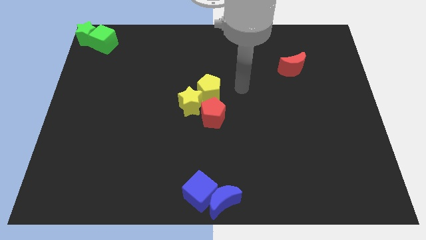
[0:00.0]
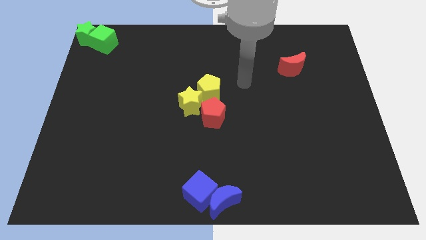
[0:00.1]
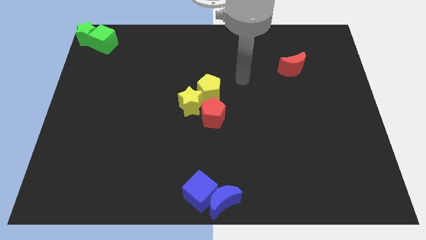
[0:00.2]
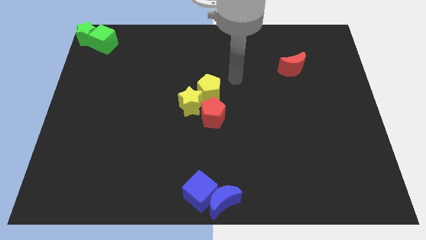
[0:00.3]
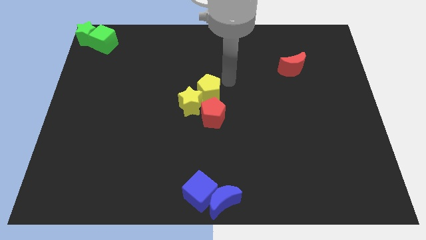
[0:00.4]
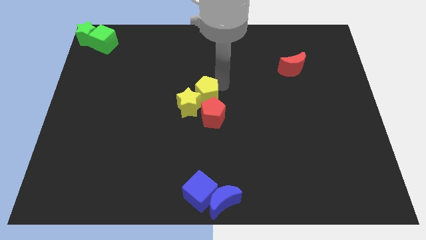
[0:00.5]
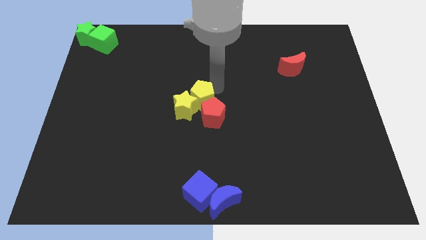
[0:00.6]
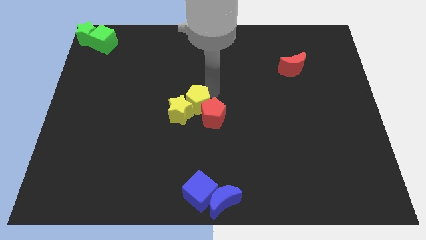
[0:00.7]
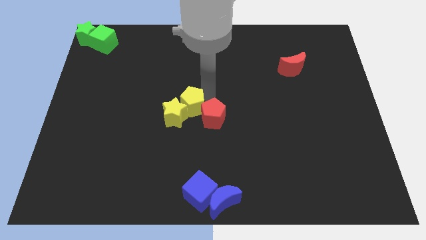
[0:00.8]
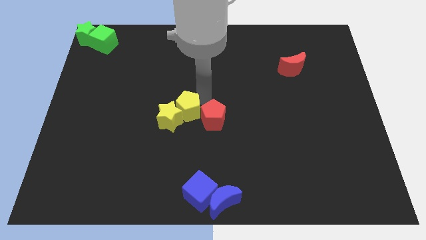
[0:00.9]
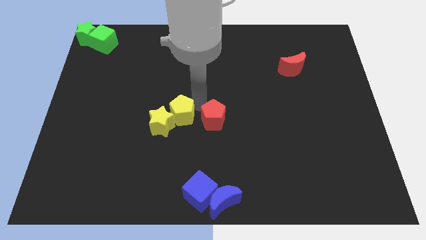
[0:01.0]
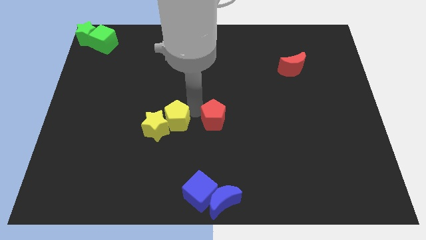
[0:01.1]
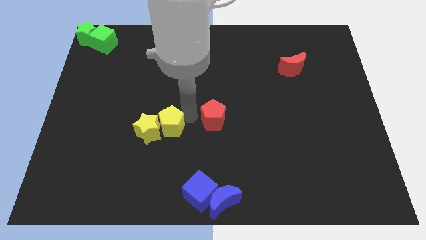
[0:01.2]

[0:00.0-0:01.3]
push yellow pentagon beside red pentagon

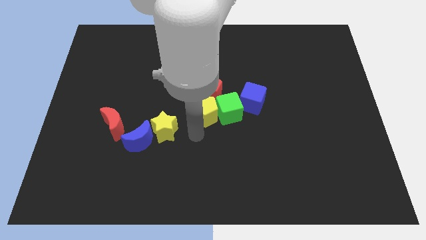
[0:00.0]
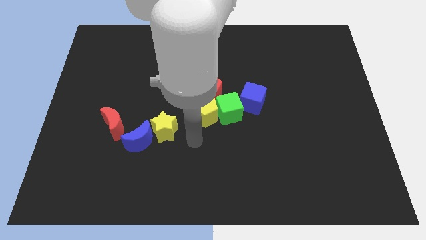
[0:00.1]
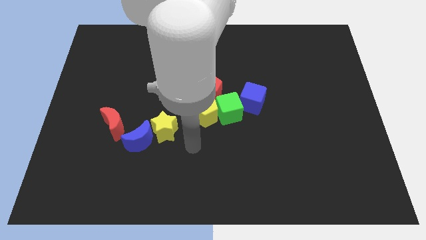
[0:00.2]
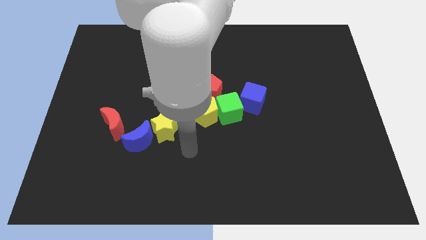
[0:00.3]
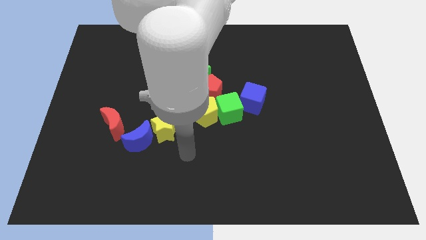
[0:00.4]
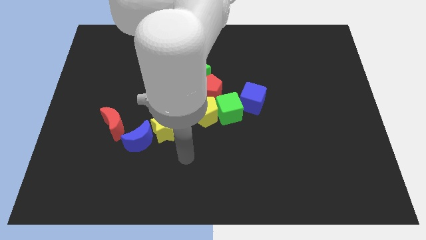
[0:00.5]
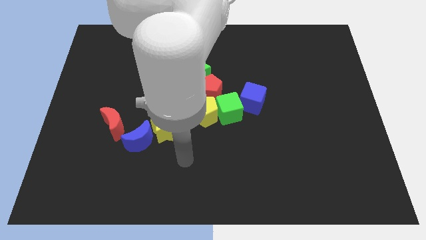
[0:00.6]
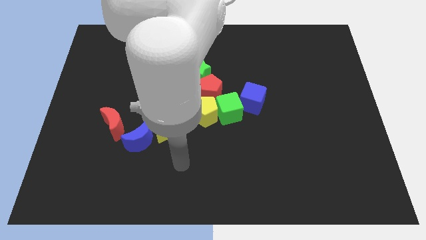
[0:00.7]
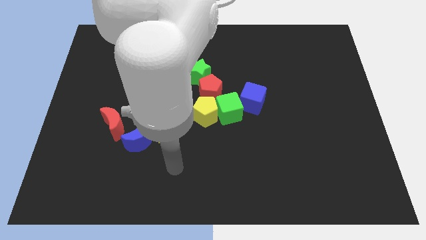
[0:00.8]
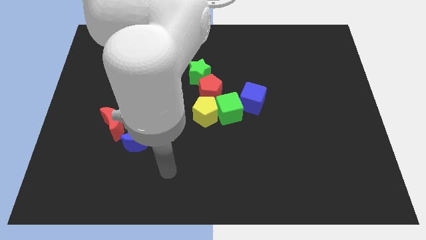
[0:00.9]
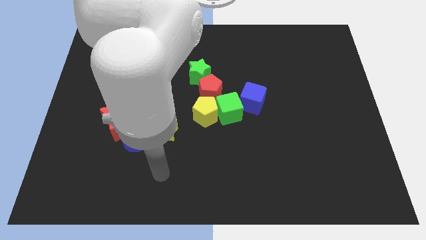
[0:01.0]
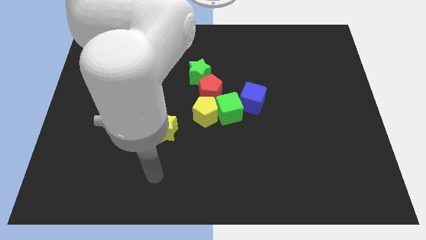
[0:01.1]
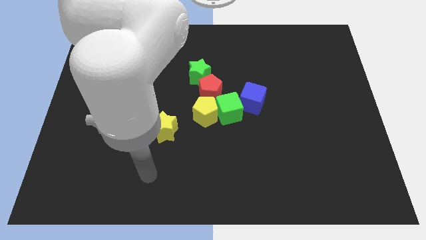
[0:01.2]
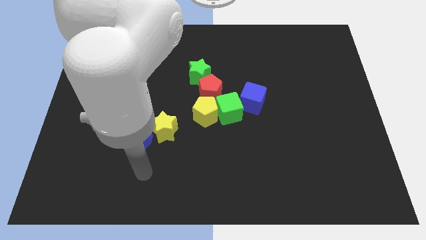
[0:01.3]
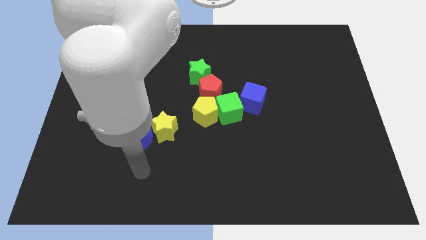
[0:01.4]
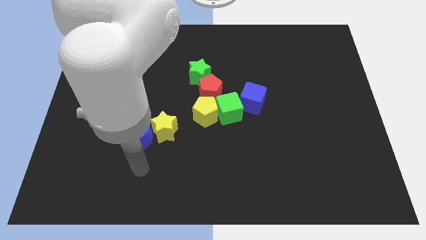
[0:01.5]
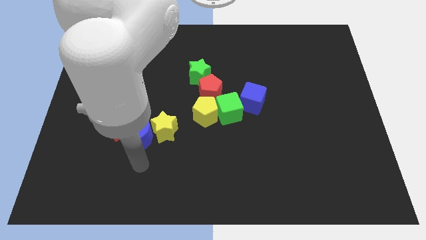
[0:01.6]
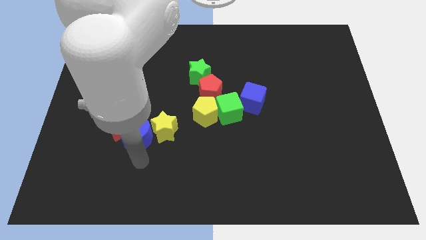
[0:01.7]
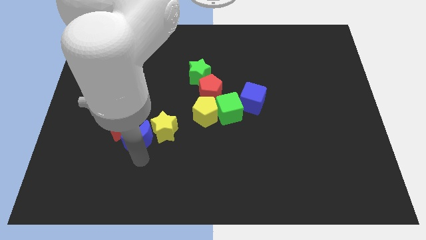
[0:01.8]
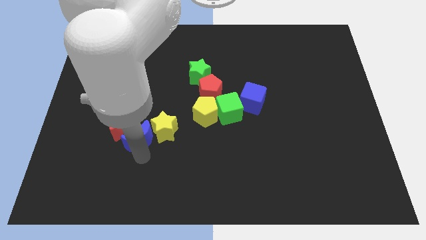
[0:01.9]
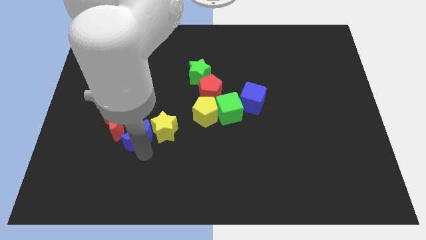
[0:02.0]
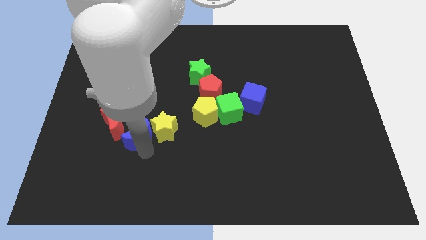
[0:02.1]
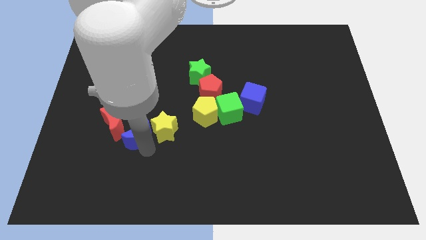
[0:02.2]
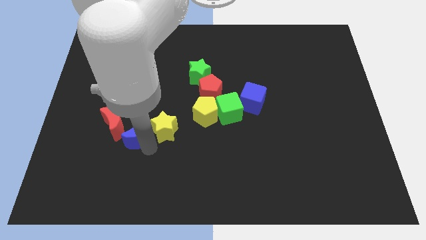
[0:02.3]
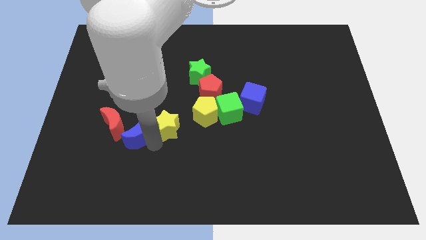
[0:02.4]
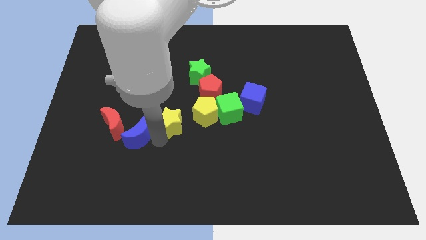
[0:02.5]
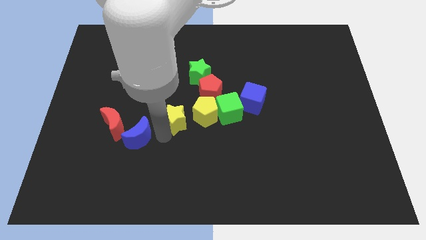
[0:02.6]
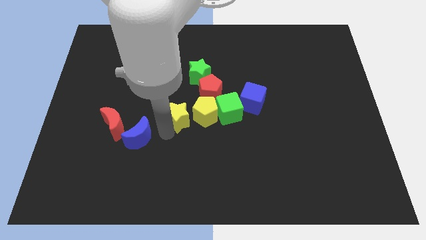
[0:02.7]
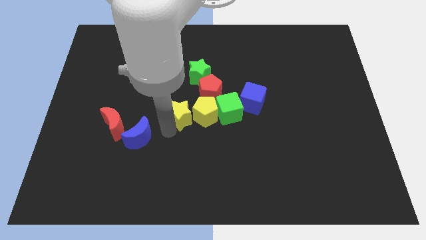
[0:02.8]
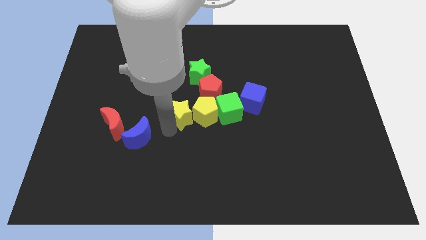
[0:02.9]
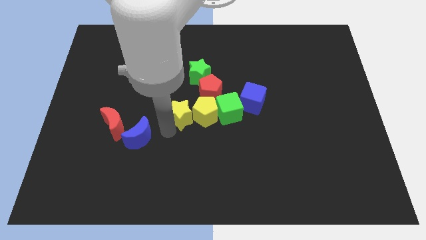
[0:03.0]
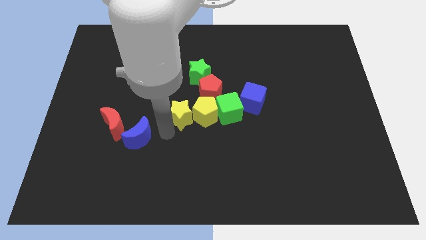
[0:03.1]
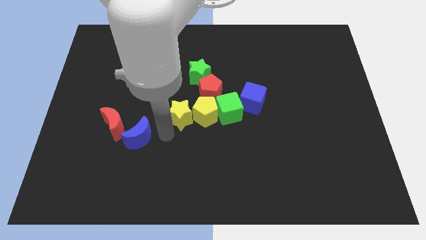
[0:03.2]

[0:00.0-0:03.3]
separate the yellow star and the yellow pentagon

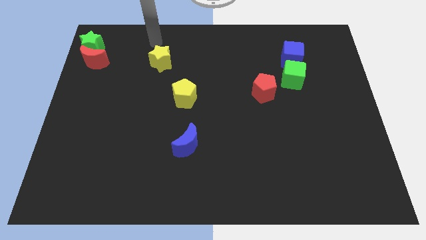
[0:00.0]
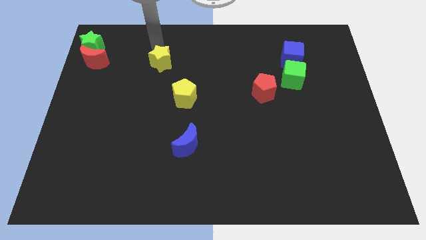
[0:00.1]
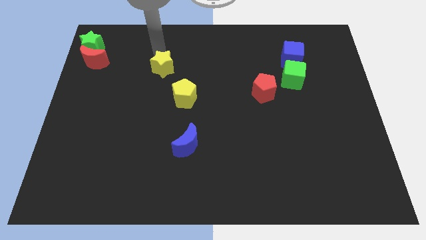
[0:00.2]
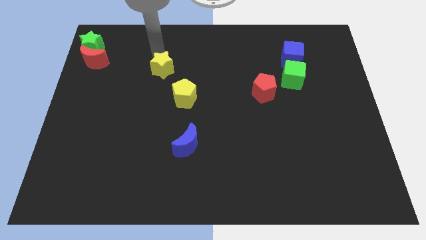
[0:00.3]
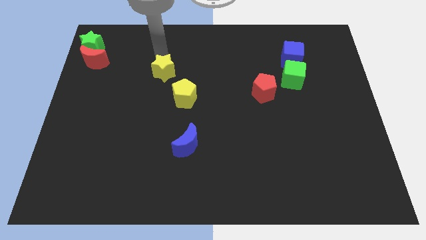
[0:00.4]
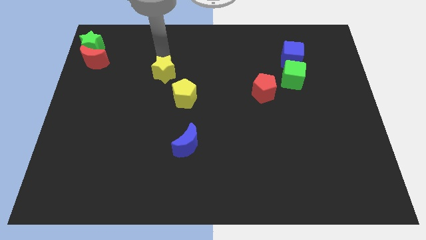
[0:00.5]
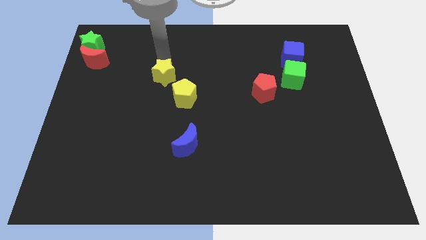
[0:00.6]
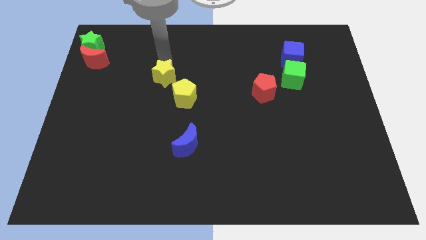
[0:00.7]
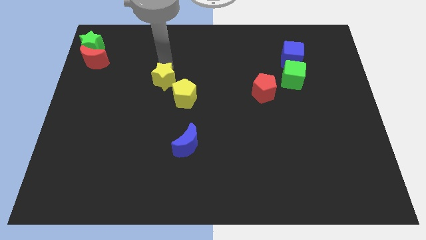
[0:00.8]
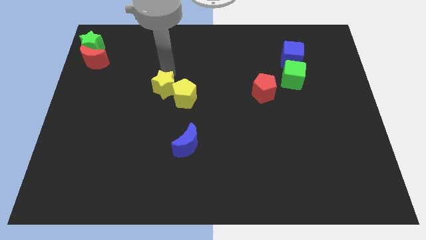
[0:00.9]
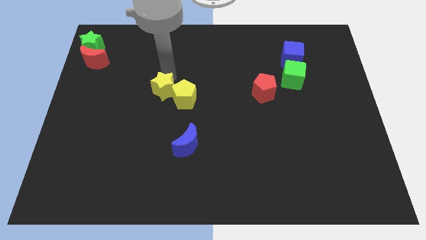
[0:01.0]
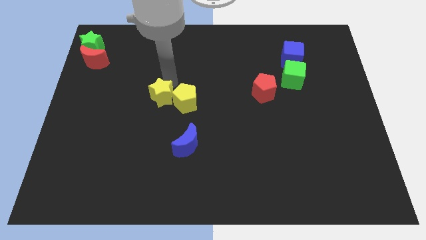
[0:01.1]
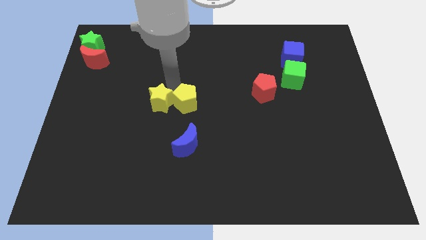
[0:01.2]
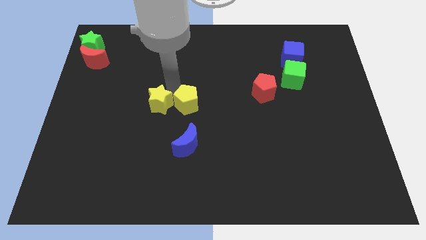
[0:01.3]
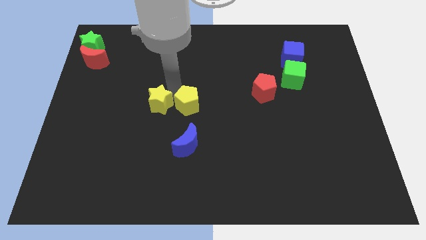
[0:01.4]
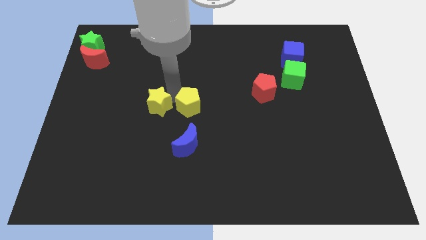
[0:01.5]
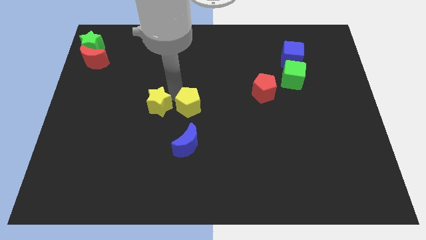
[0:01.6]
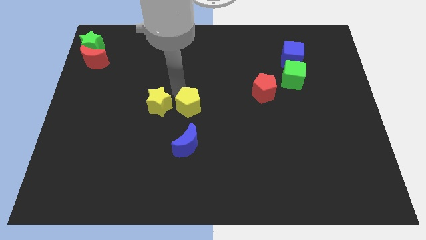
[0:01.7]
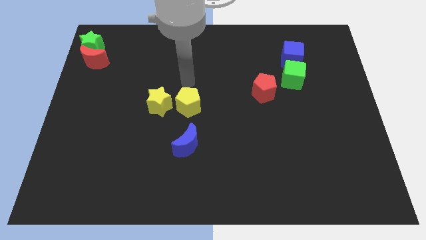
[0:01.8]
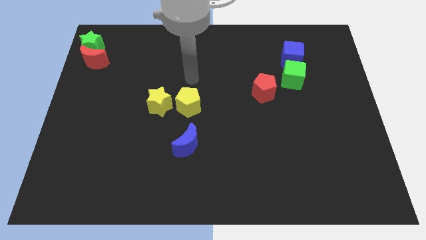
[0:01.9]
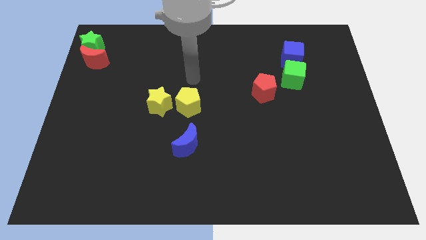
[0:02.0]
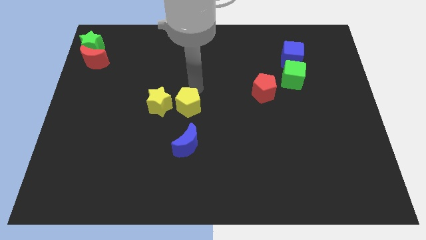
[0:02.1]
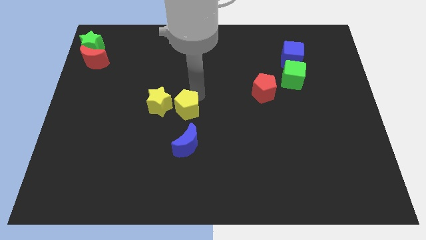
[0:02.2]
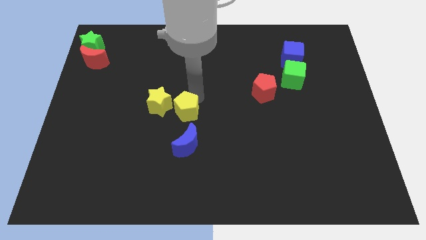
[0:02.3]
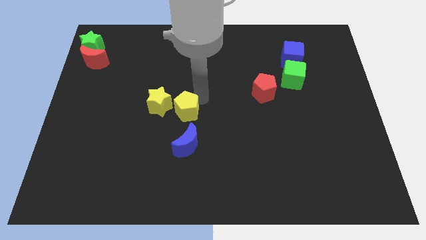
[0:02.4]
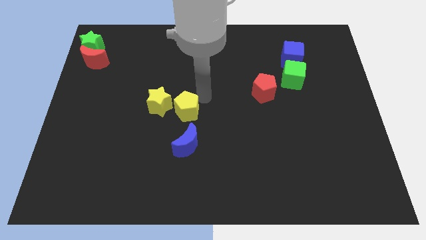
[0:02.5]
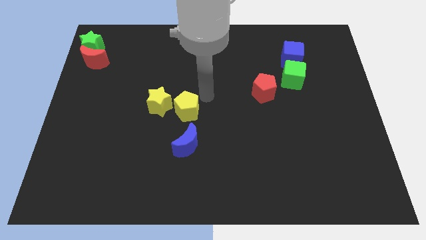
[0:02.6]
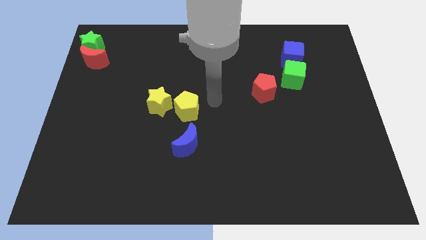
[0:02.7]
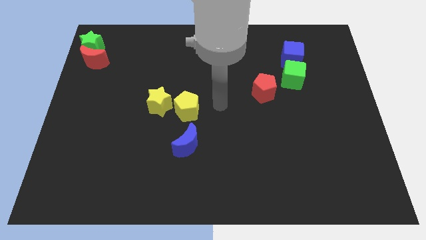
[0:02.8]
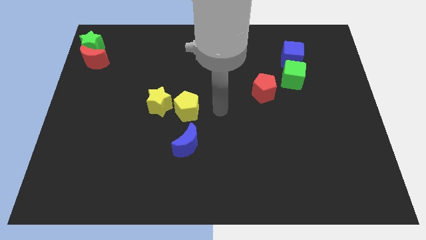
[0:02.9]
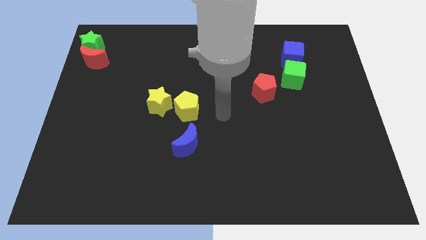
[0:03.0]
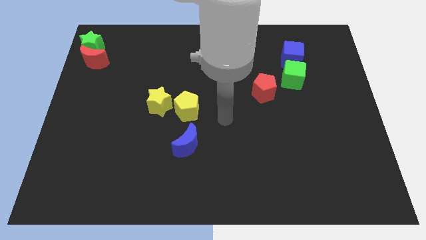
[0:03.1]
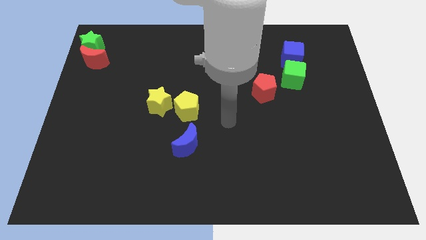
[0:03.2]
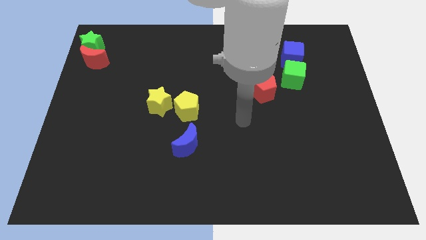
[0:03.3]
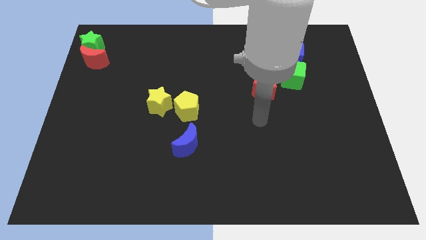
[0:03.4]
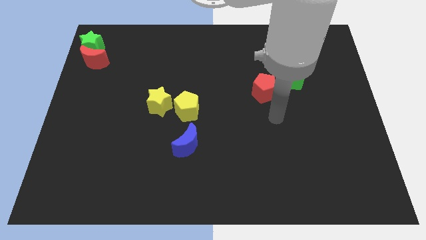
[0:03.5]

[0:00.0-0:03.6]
move the yellow blocks diagonally bottom left to the red pentagon

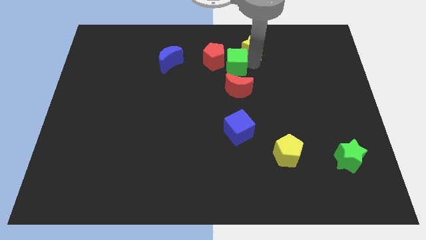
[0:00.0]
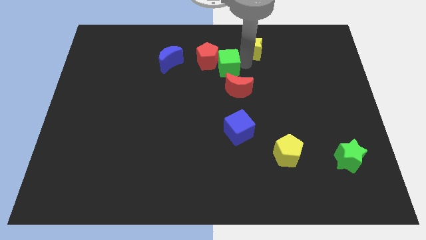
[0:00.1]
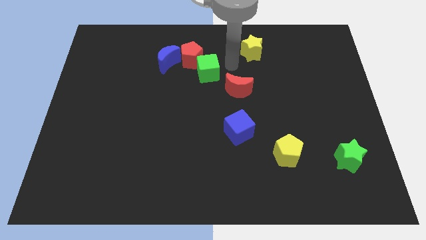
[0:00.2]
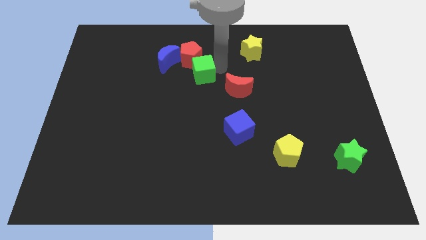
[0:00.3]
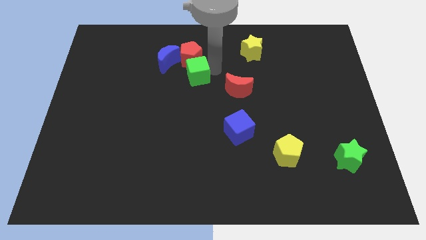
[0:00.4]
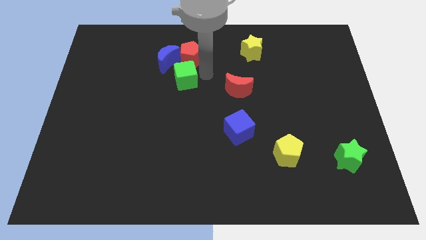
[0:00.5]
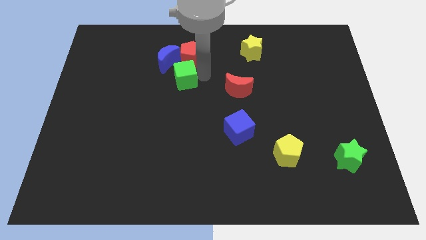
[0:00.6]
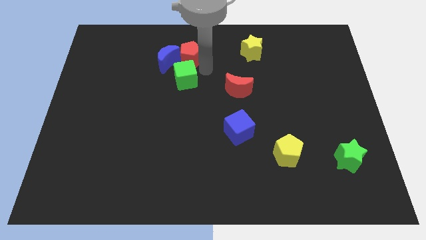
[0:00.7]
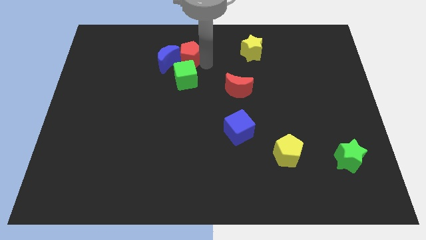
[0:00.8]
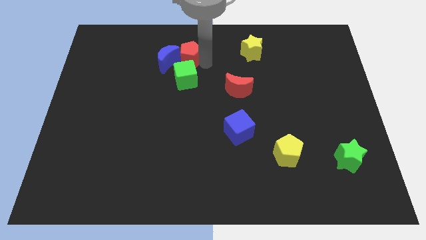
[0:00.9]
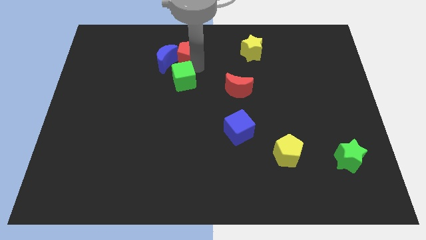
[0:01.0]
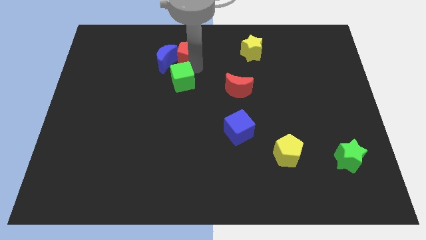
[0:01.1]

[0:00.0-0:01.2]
place the green cube vertically below the red pentagon
